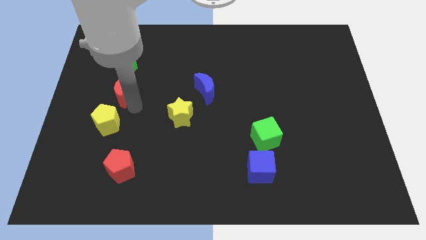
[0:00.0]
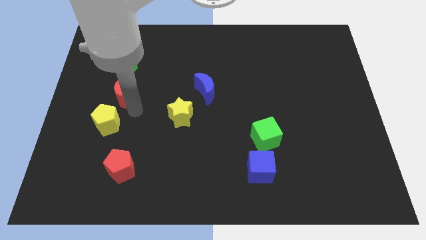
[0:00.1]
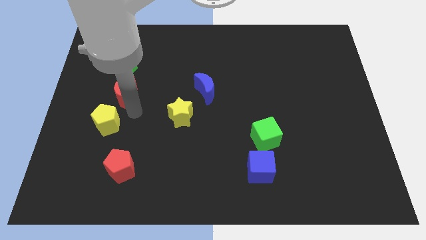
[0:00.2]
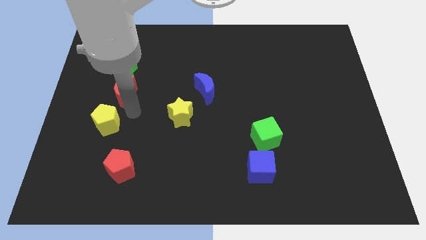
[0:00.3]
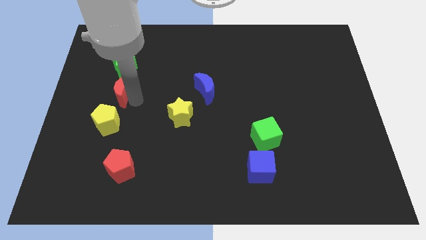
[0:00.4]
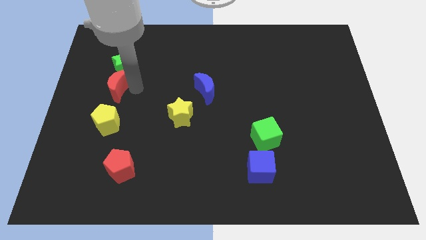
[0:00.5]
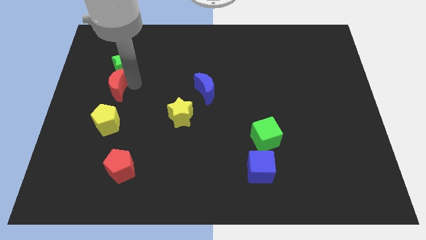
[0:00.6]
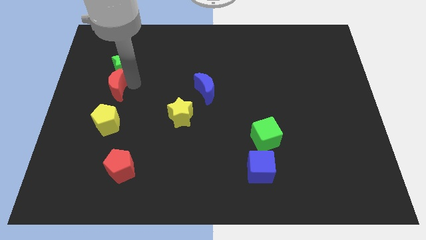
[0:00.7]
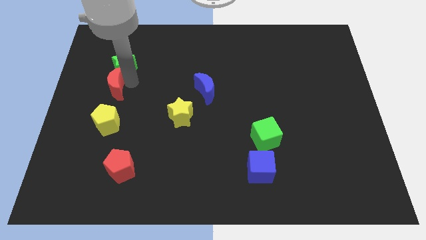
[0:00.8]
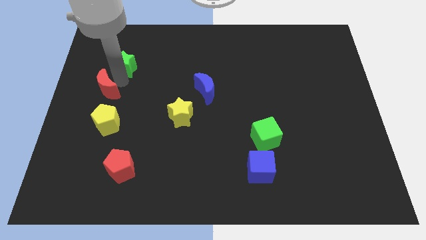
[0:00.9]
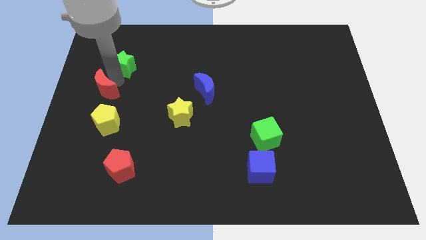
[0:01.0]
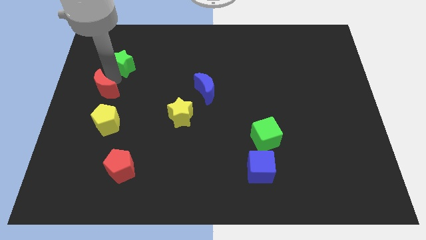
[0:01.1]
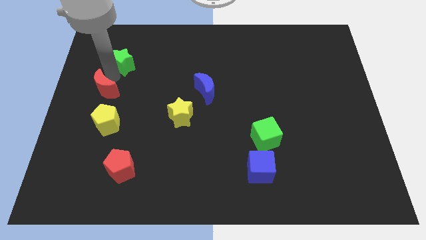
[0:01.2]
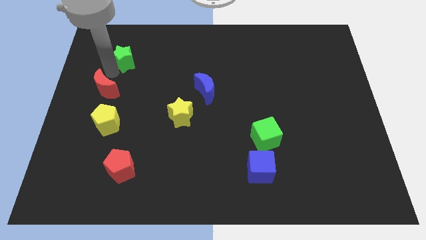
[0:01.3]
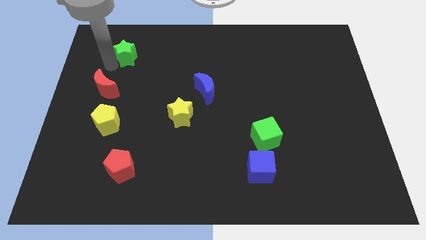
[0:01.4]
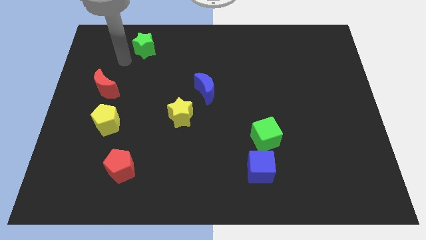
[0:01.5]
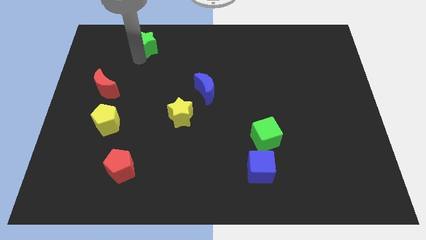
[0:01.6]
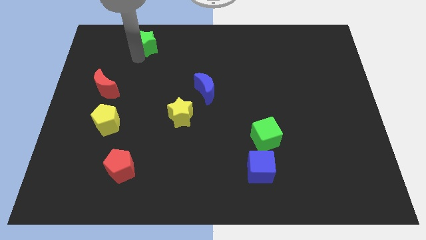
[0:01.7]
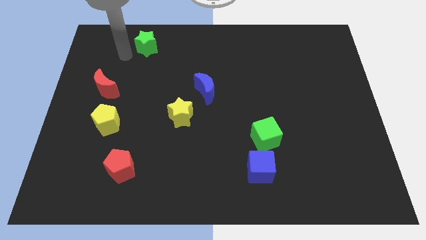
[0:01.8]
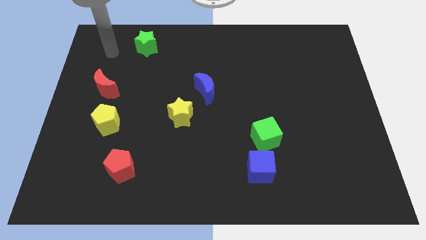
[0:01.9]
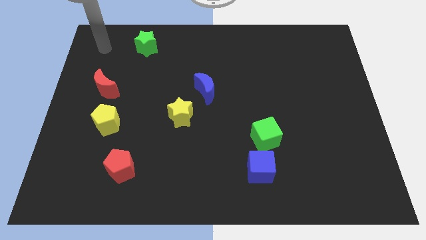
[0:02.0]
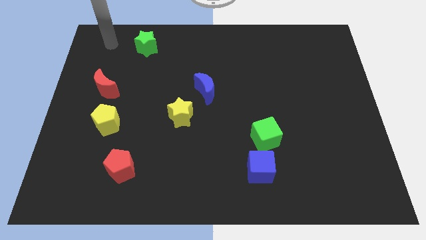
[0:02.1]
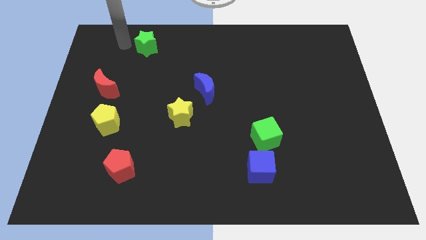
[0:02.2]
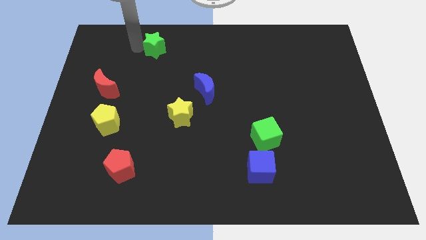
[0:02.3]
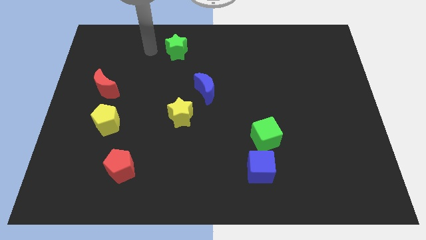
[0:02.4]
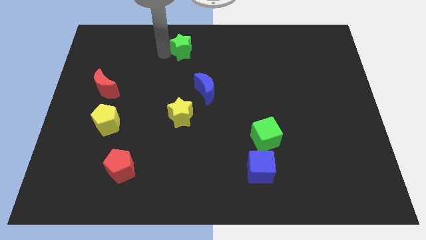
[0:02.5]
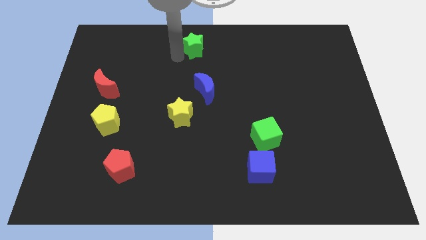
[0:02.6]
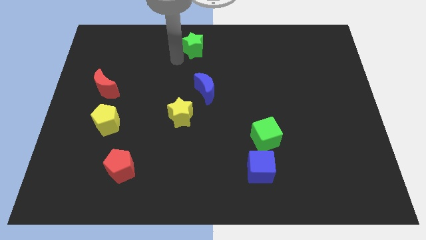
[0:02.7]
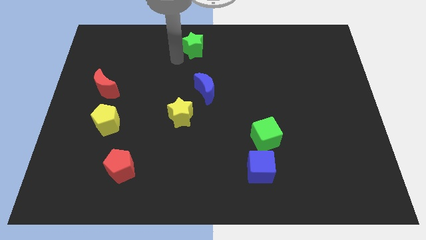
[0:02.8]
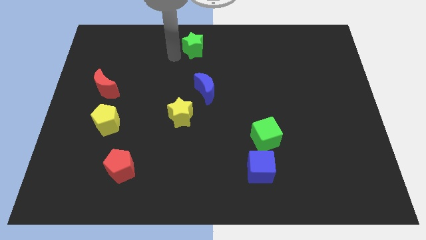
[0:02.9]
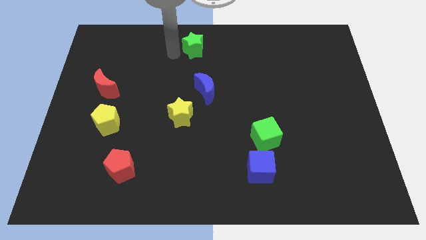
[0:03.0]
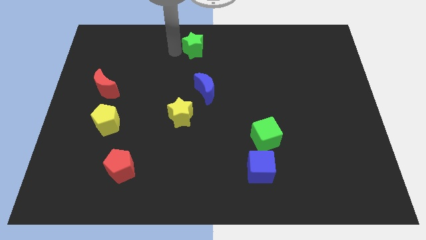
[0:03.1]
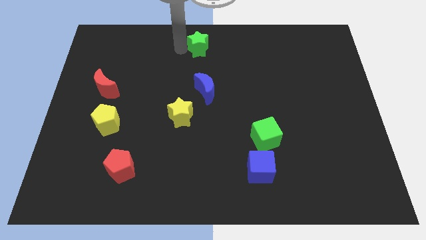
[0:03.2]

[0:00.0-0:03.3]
place the green star above the blue crescent

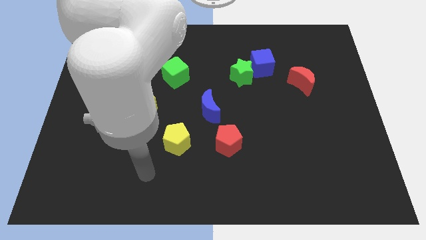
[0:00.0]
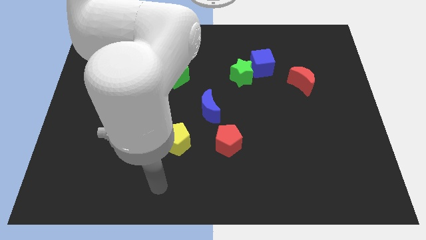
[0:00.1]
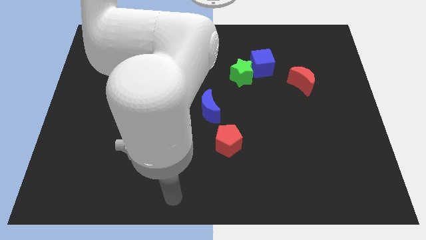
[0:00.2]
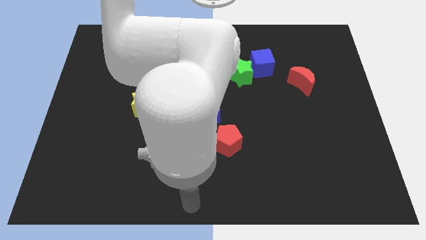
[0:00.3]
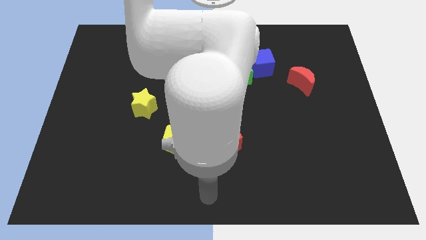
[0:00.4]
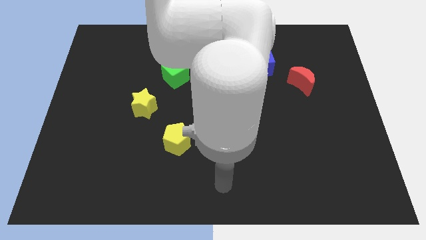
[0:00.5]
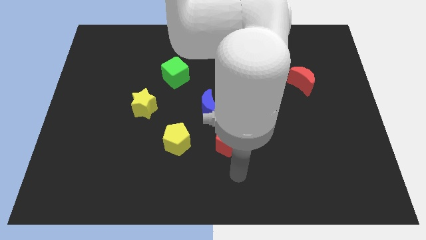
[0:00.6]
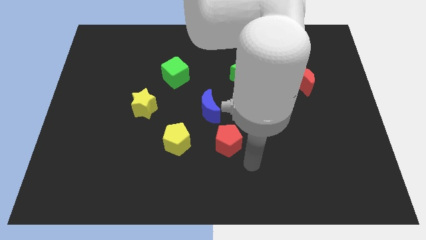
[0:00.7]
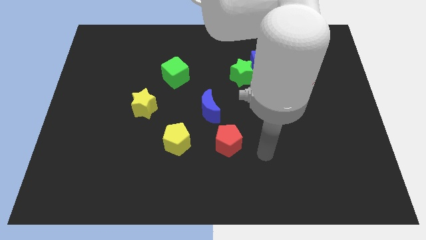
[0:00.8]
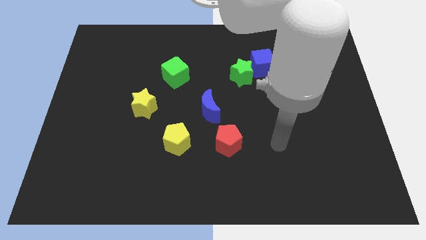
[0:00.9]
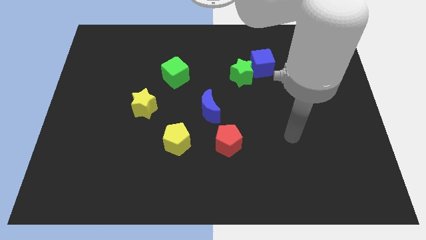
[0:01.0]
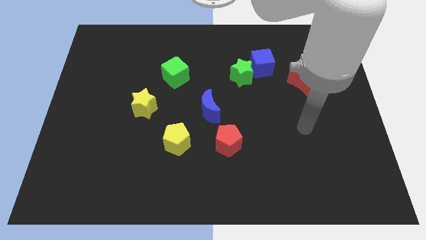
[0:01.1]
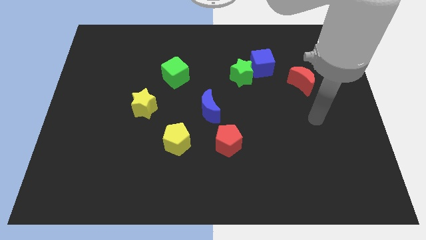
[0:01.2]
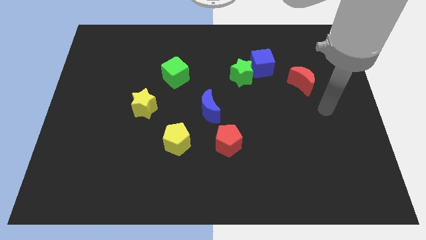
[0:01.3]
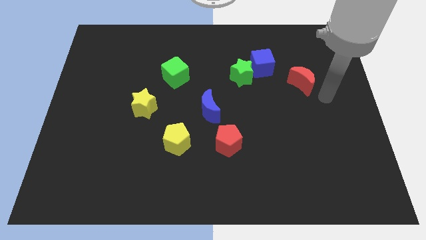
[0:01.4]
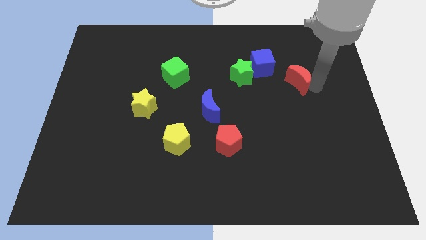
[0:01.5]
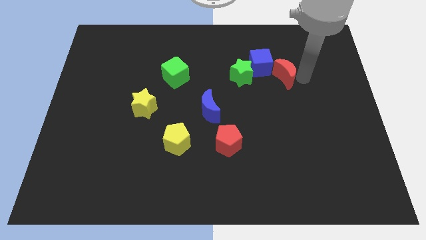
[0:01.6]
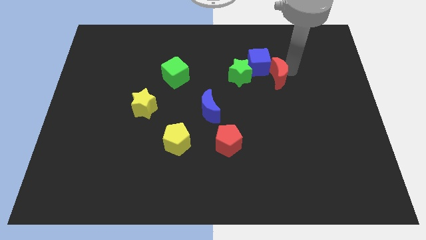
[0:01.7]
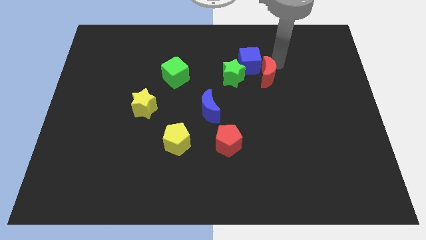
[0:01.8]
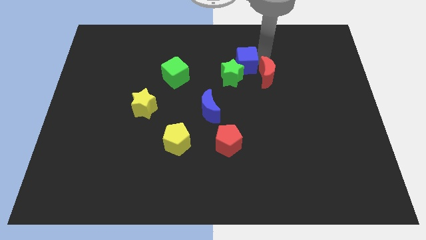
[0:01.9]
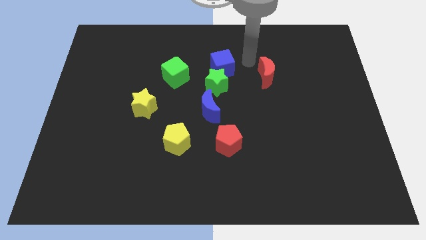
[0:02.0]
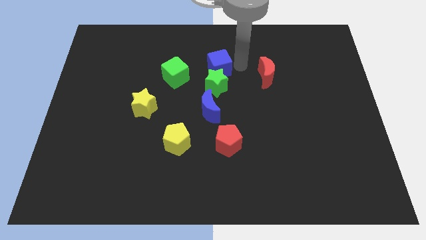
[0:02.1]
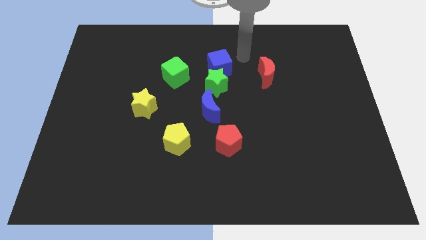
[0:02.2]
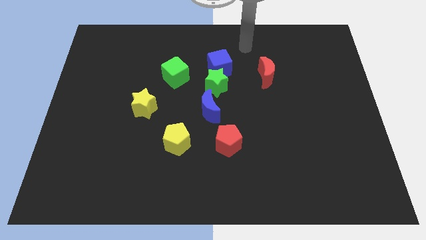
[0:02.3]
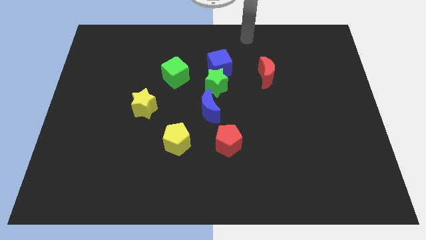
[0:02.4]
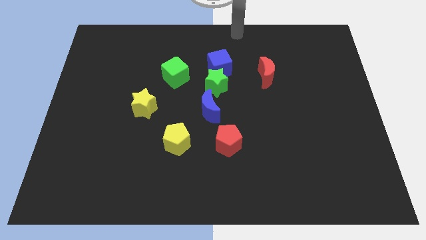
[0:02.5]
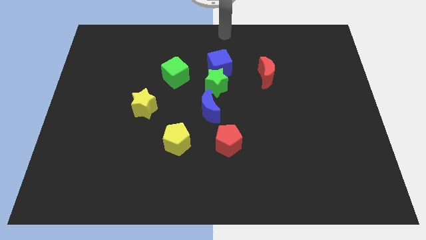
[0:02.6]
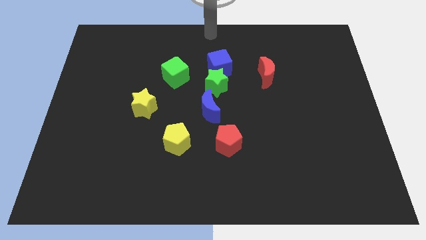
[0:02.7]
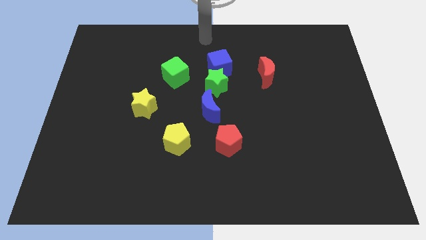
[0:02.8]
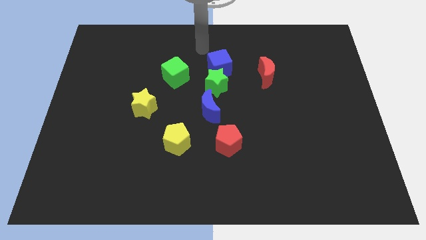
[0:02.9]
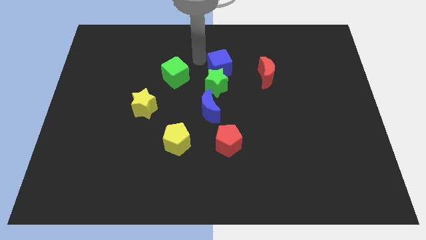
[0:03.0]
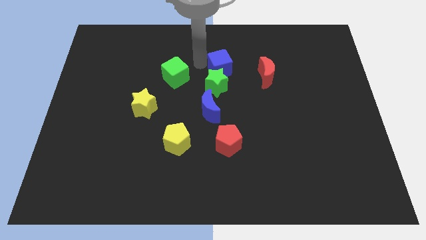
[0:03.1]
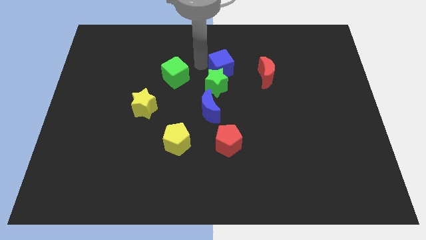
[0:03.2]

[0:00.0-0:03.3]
put the blue cube to the top side of the green star

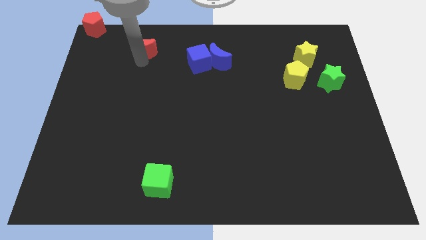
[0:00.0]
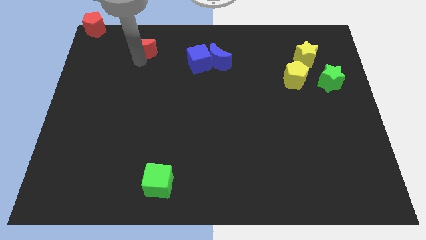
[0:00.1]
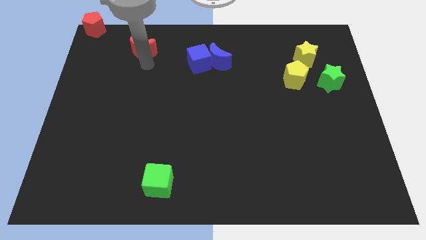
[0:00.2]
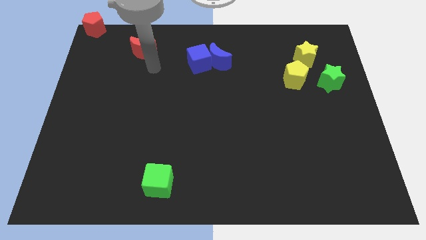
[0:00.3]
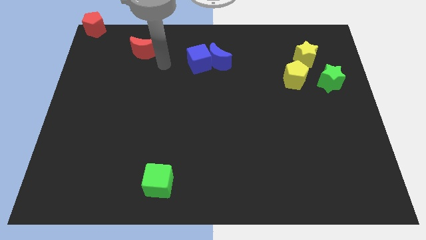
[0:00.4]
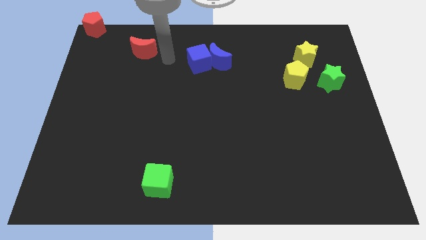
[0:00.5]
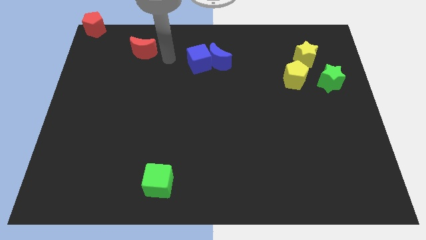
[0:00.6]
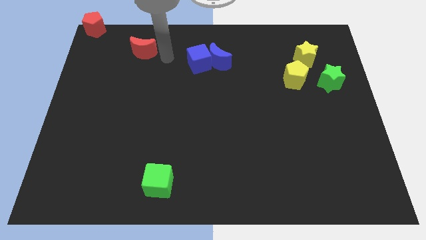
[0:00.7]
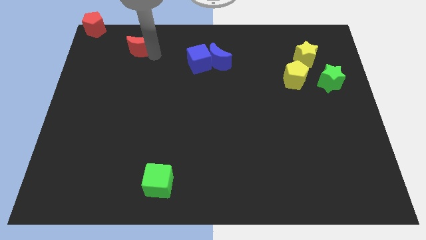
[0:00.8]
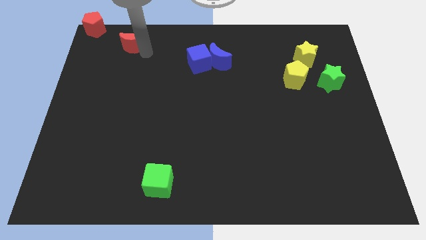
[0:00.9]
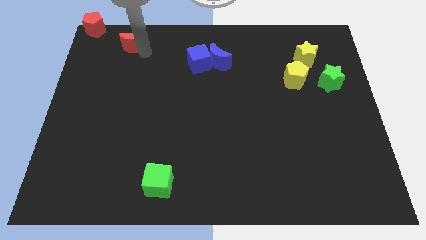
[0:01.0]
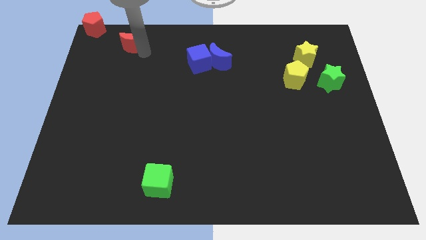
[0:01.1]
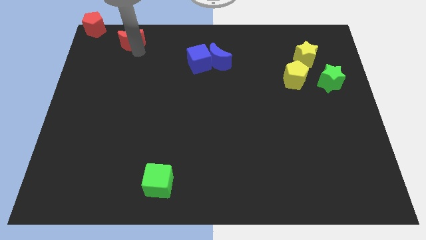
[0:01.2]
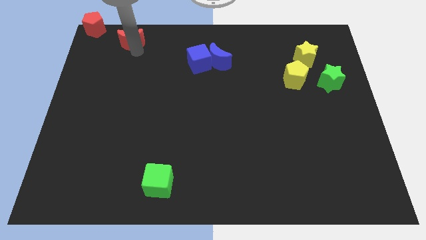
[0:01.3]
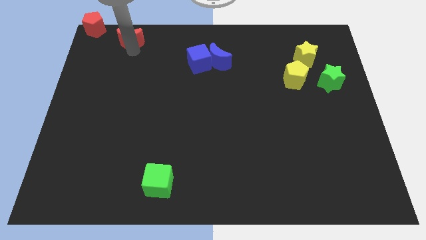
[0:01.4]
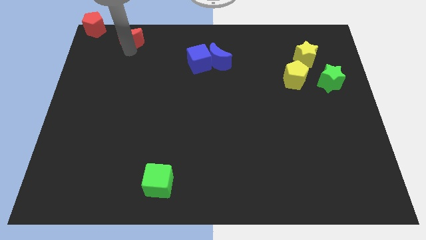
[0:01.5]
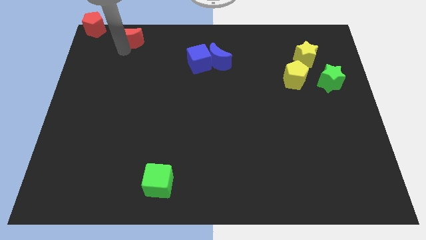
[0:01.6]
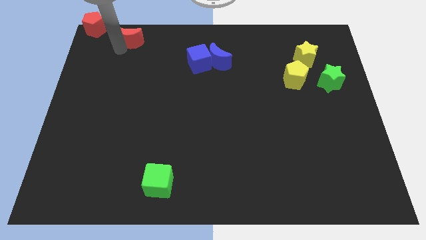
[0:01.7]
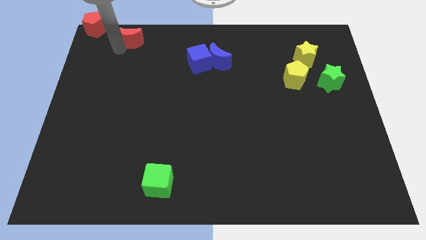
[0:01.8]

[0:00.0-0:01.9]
push the red crescent towards the red pentagon

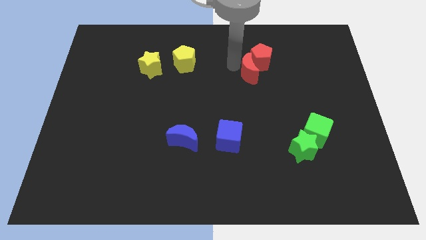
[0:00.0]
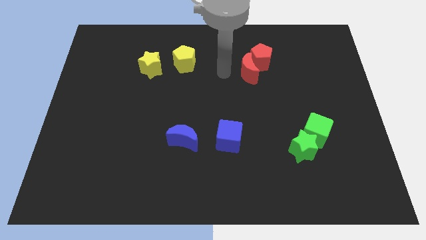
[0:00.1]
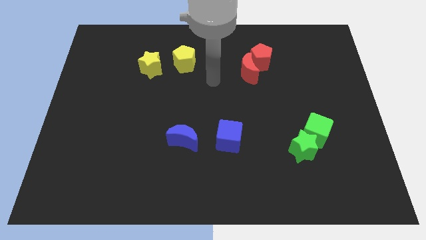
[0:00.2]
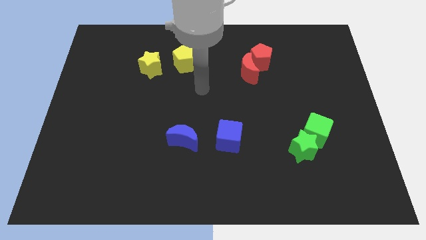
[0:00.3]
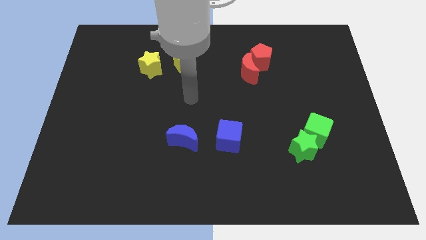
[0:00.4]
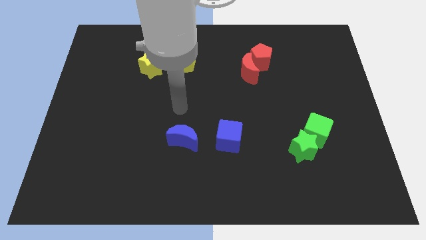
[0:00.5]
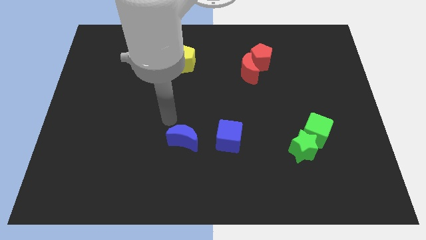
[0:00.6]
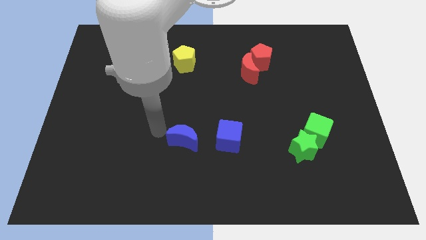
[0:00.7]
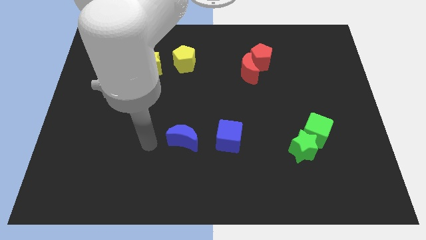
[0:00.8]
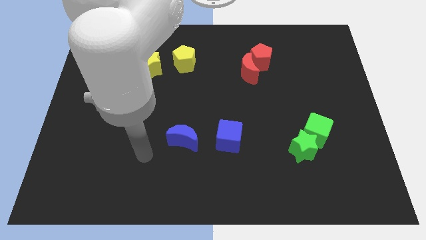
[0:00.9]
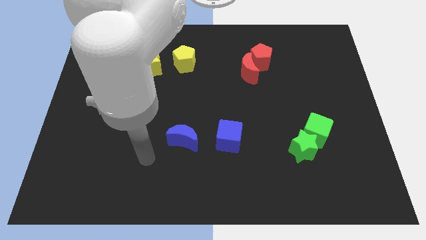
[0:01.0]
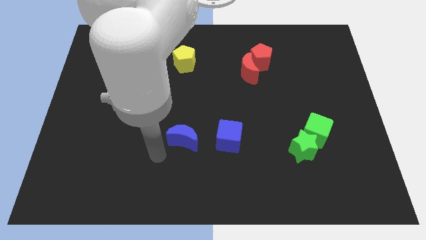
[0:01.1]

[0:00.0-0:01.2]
point your arm at the bottom left side of the blue moon
